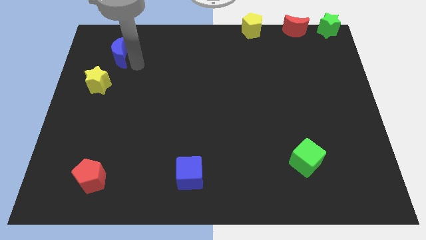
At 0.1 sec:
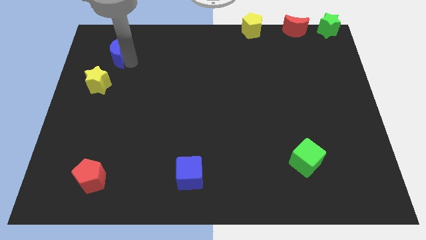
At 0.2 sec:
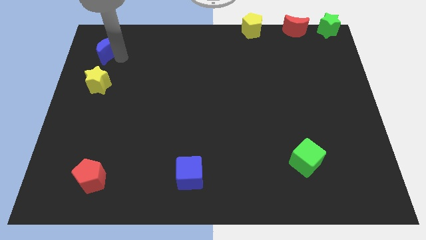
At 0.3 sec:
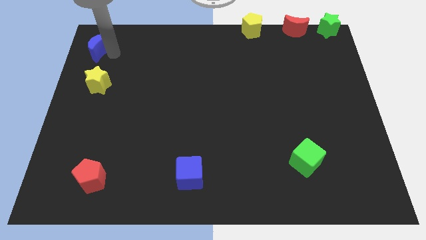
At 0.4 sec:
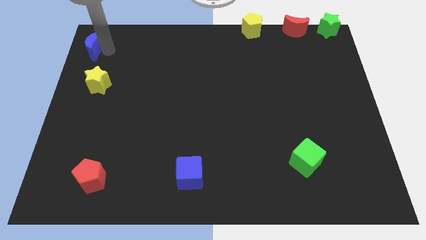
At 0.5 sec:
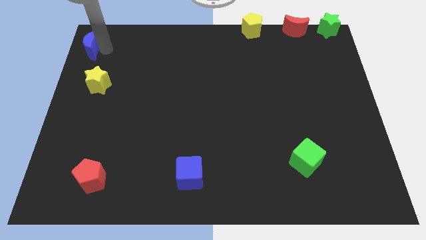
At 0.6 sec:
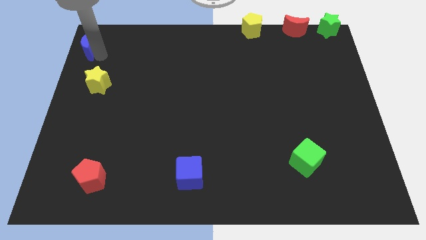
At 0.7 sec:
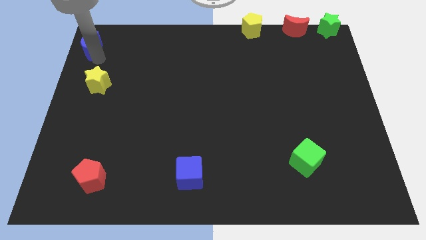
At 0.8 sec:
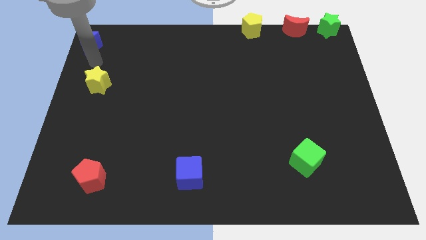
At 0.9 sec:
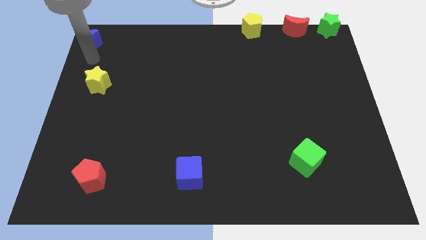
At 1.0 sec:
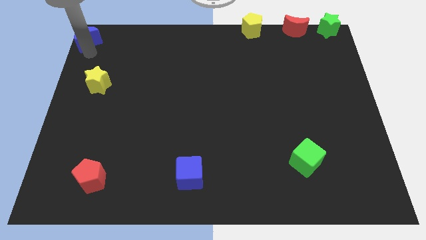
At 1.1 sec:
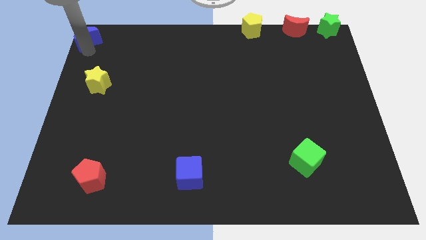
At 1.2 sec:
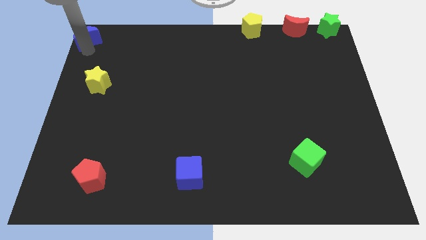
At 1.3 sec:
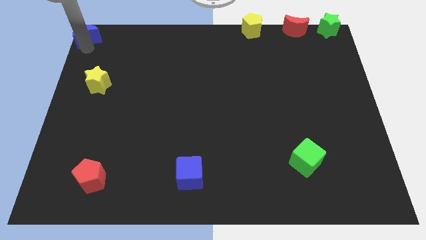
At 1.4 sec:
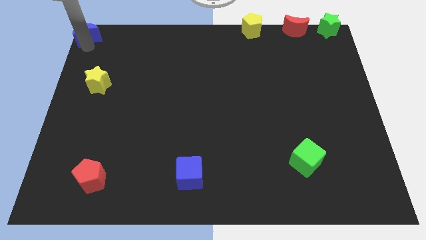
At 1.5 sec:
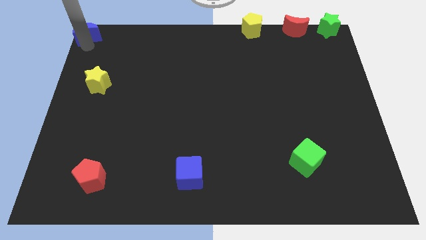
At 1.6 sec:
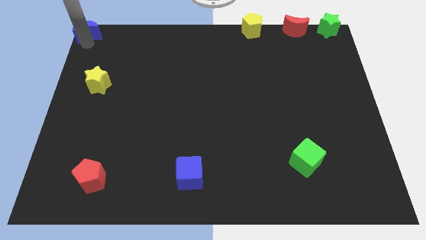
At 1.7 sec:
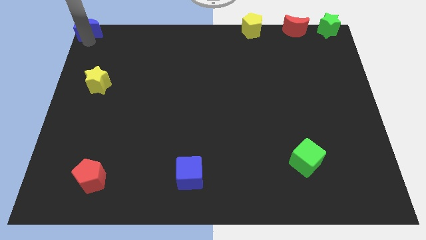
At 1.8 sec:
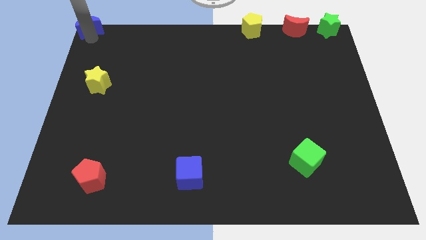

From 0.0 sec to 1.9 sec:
place the blue crescent towards the top left corner of the board

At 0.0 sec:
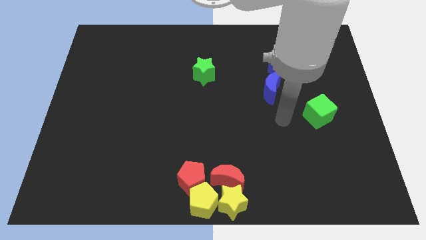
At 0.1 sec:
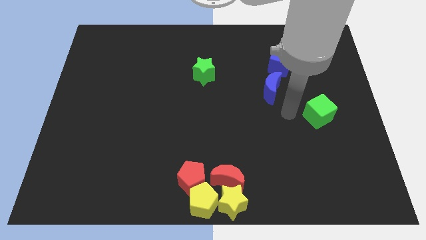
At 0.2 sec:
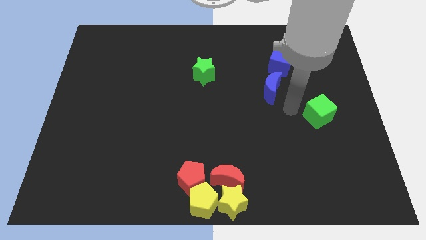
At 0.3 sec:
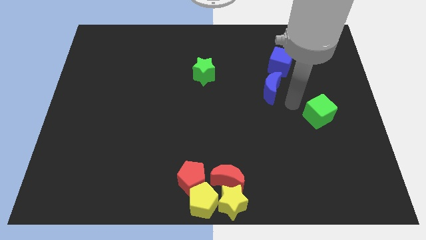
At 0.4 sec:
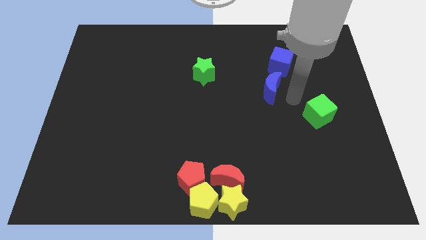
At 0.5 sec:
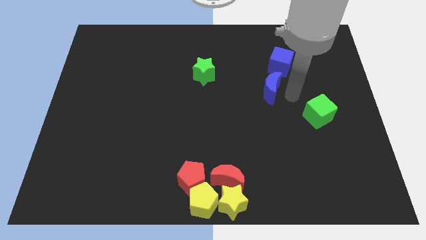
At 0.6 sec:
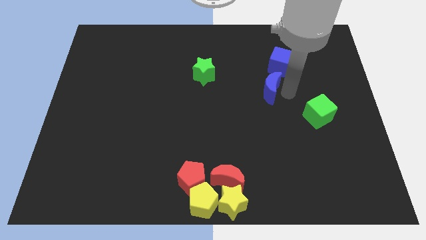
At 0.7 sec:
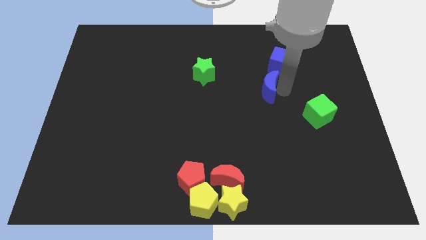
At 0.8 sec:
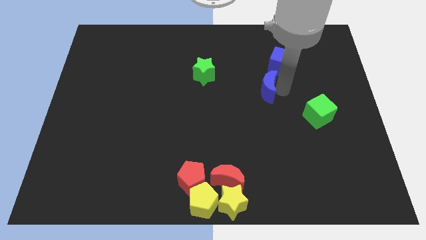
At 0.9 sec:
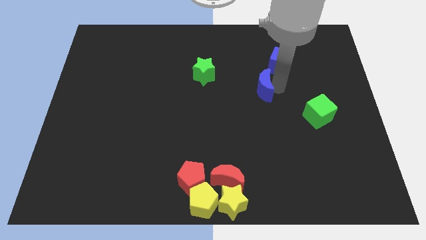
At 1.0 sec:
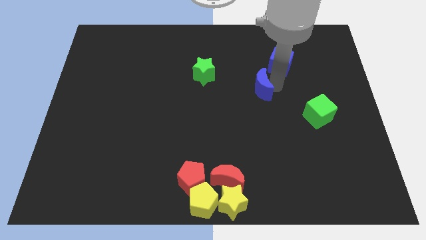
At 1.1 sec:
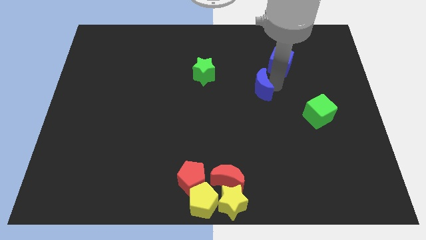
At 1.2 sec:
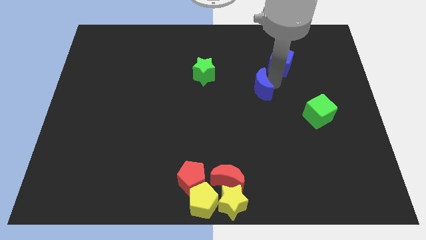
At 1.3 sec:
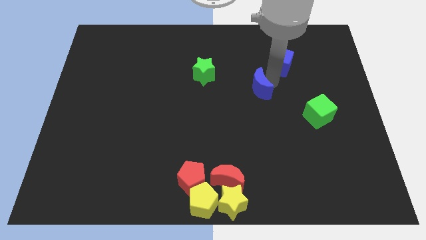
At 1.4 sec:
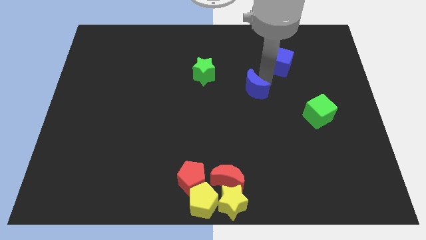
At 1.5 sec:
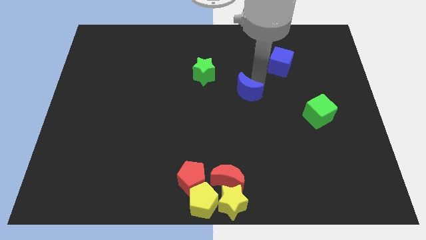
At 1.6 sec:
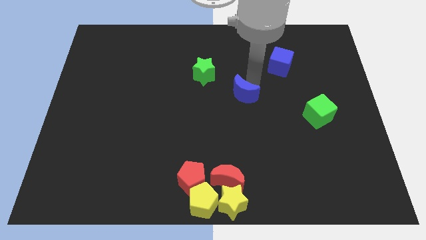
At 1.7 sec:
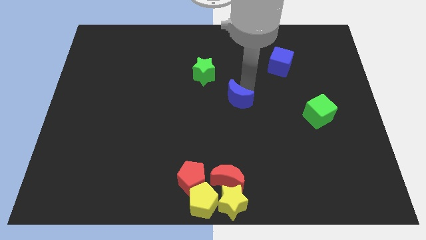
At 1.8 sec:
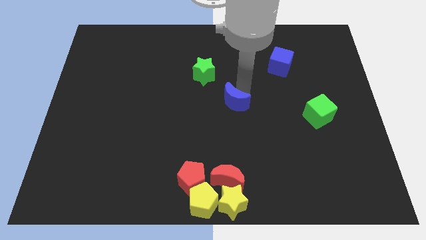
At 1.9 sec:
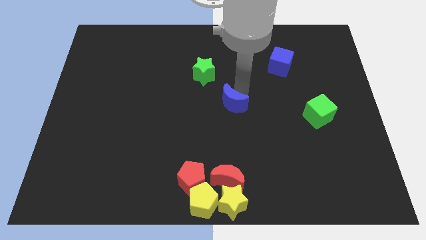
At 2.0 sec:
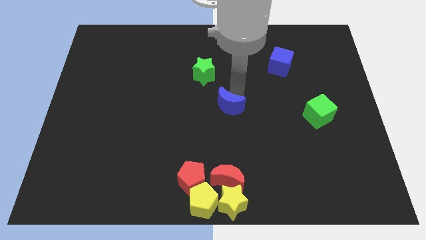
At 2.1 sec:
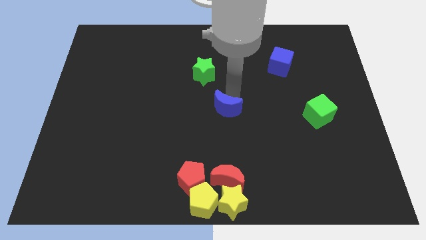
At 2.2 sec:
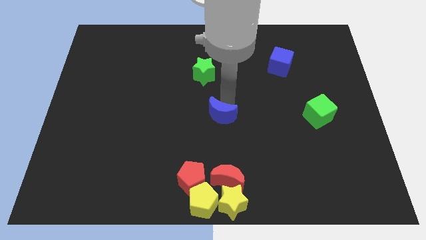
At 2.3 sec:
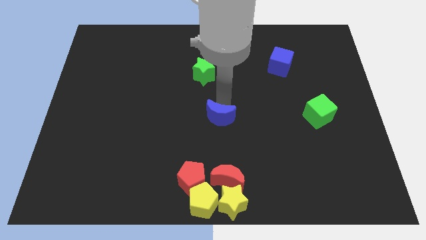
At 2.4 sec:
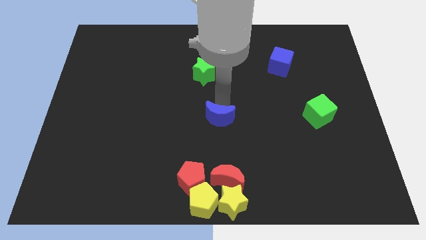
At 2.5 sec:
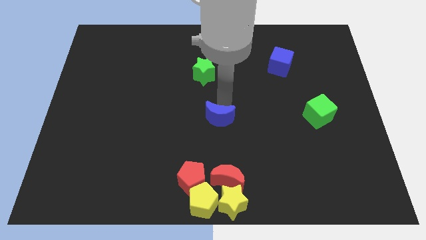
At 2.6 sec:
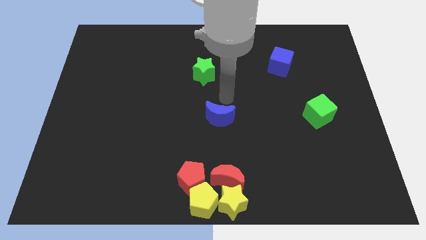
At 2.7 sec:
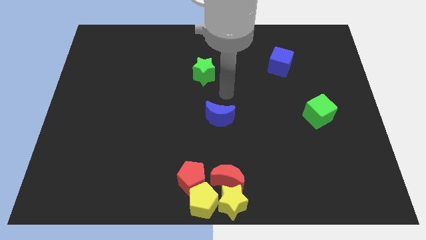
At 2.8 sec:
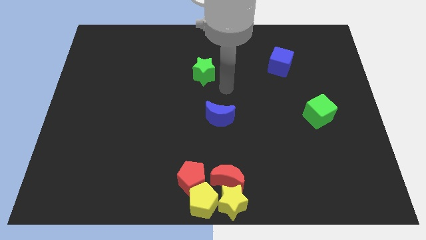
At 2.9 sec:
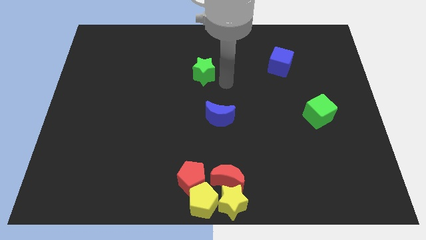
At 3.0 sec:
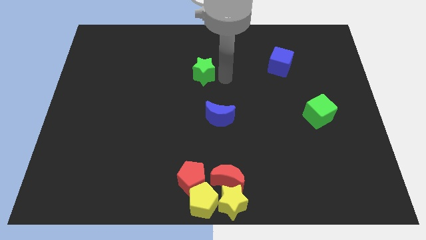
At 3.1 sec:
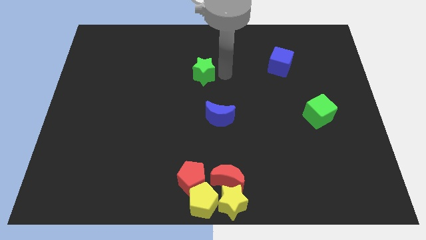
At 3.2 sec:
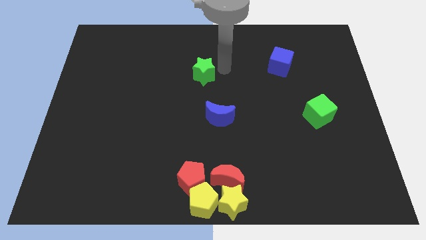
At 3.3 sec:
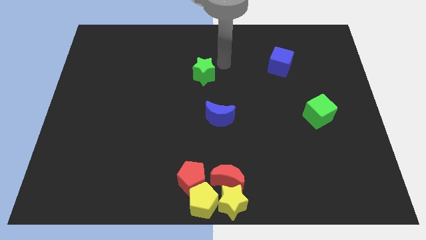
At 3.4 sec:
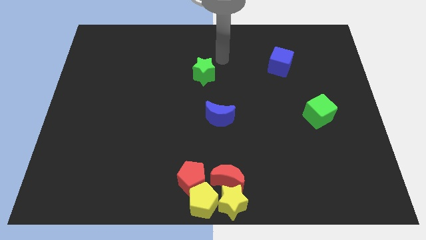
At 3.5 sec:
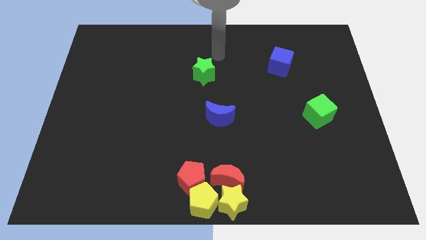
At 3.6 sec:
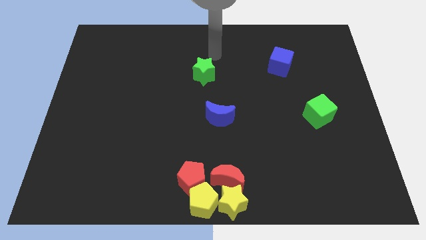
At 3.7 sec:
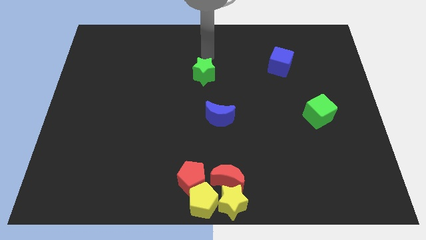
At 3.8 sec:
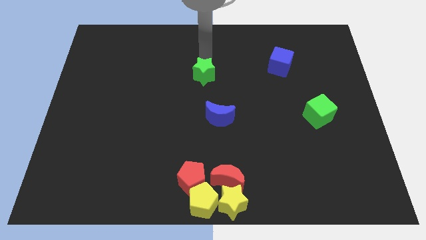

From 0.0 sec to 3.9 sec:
move the blue crescent to the centre of the board

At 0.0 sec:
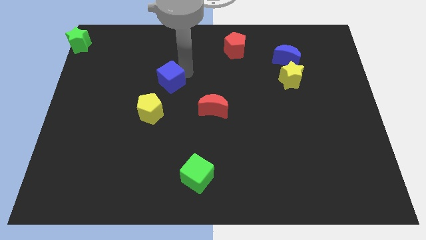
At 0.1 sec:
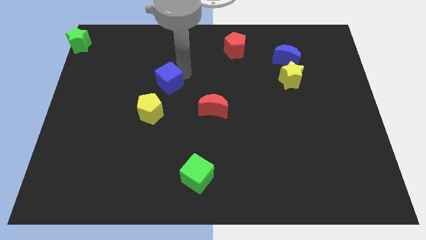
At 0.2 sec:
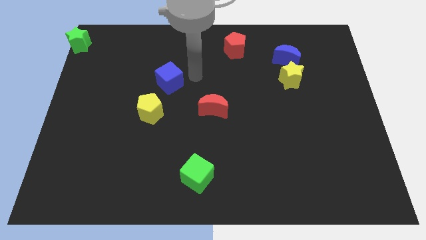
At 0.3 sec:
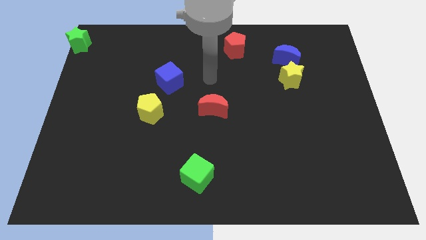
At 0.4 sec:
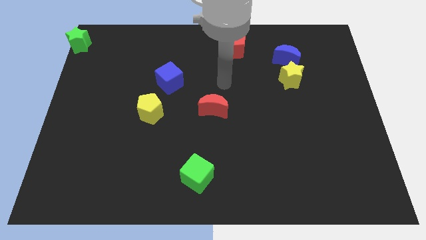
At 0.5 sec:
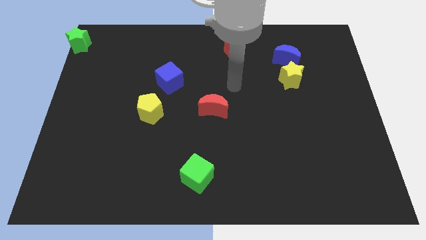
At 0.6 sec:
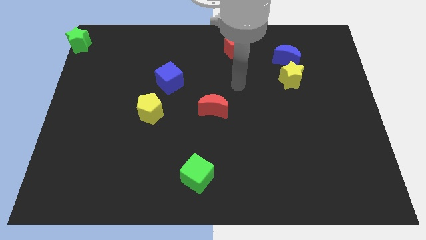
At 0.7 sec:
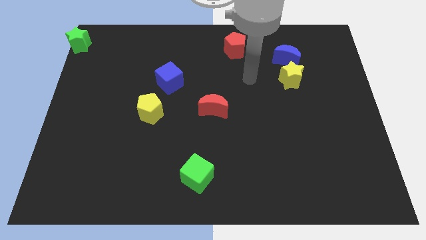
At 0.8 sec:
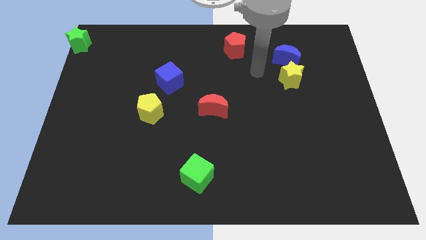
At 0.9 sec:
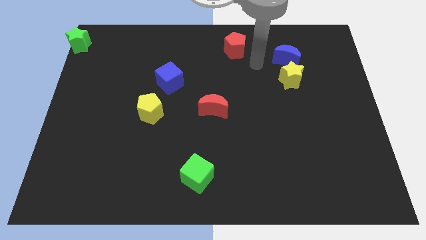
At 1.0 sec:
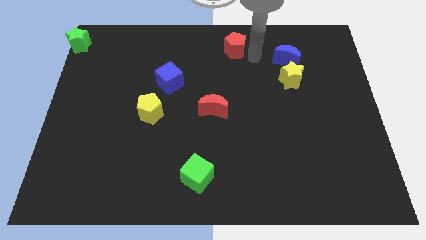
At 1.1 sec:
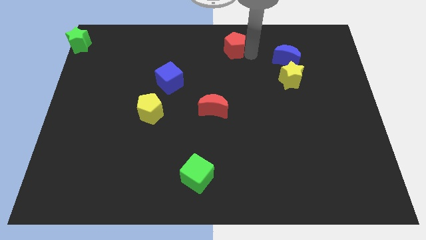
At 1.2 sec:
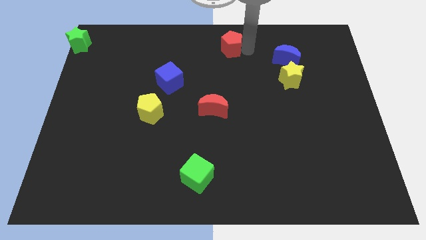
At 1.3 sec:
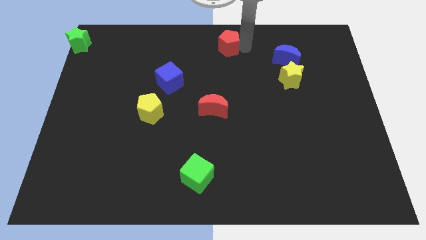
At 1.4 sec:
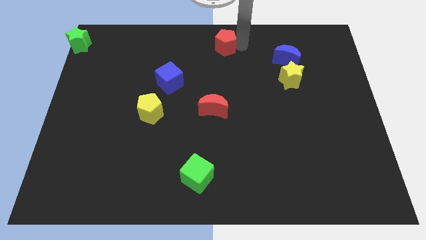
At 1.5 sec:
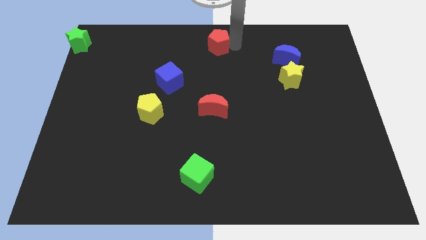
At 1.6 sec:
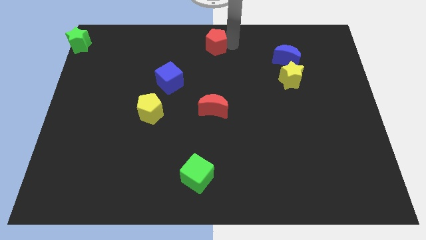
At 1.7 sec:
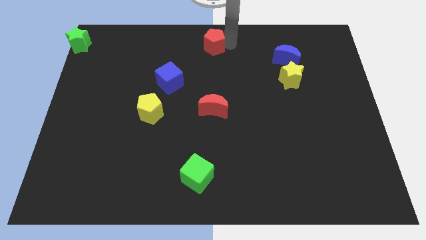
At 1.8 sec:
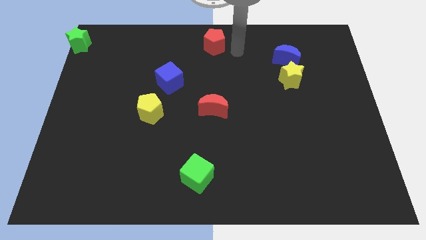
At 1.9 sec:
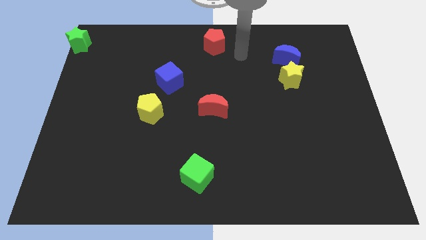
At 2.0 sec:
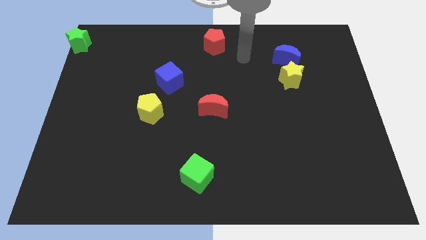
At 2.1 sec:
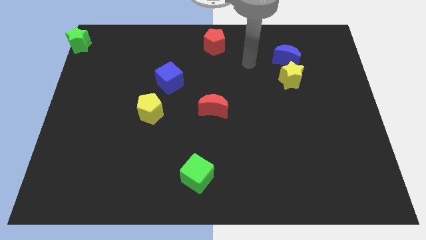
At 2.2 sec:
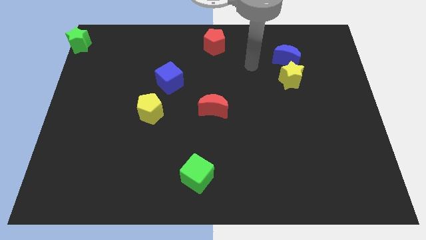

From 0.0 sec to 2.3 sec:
push red pentagon to the top center of the board

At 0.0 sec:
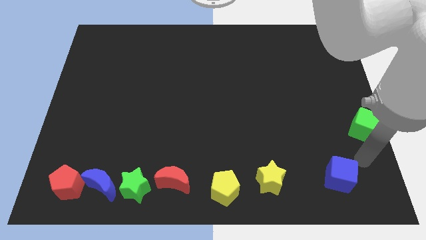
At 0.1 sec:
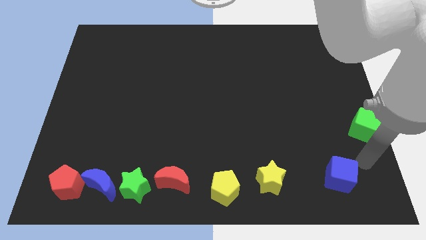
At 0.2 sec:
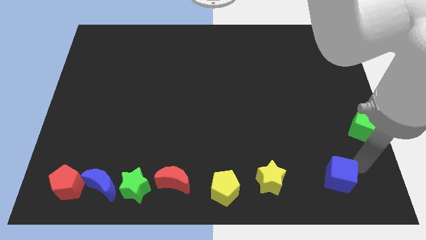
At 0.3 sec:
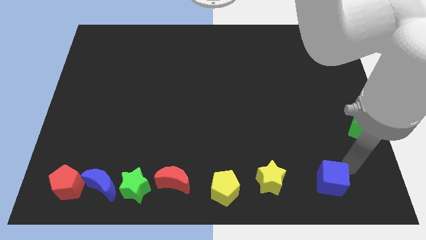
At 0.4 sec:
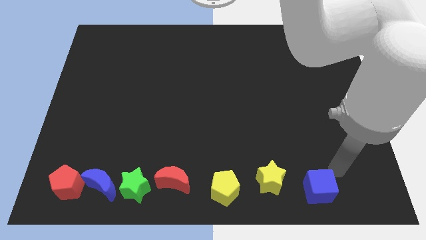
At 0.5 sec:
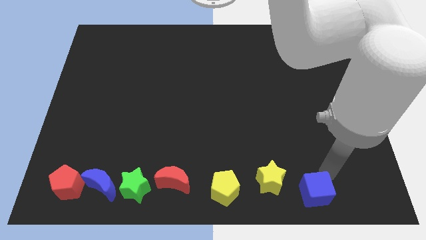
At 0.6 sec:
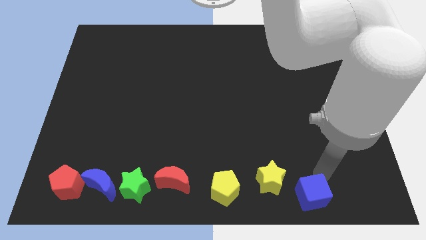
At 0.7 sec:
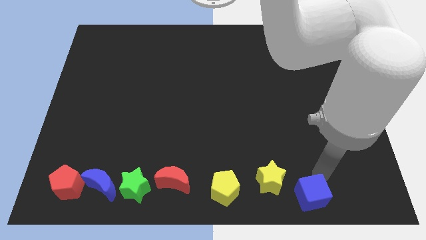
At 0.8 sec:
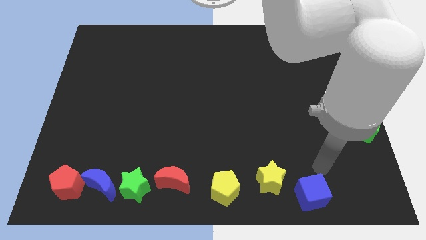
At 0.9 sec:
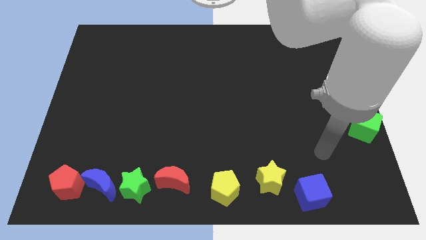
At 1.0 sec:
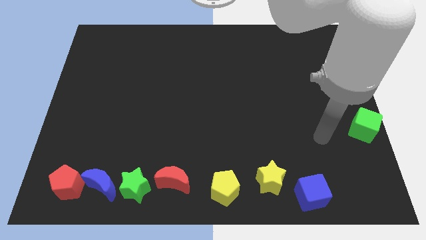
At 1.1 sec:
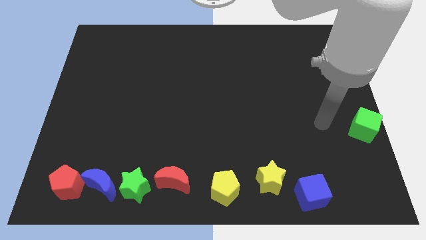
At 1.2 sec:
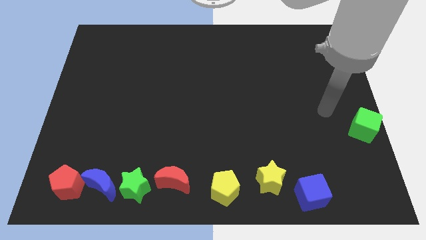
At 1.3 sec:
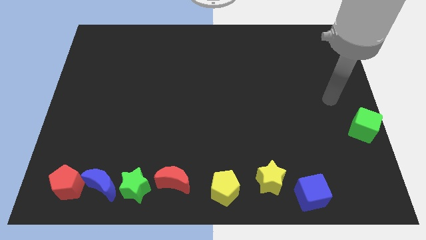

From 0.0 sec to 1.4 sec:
move the blue cube right to the yellow star
